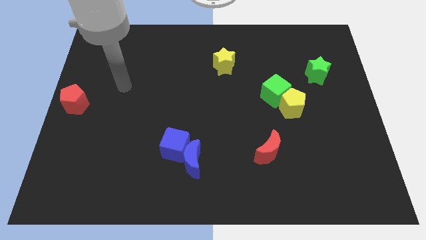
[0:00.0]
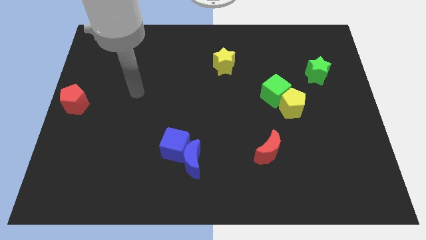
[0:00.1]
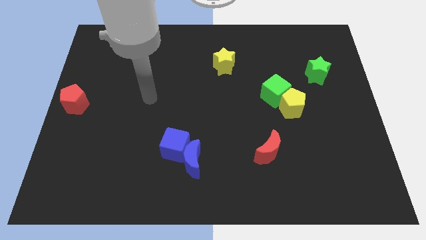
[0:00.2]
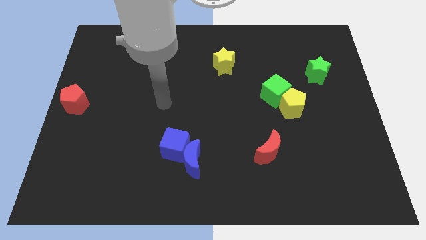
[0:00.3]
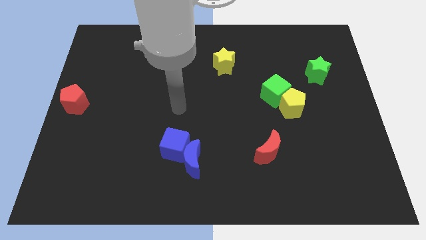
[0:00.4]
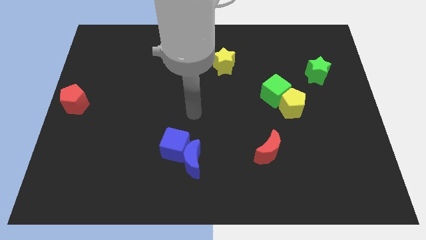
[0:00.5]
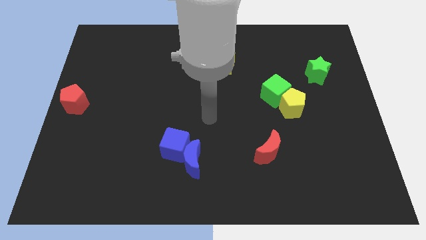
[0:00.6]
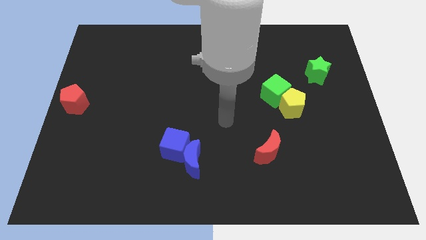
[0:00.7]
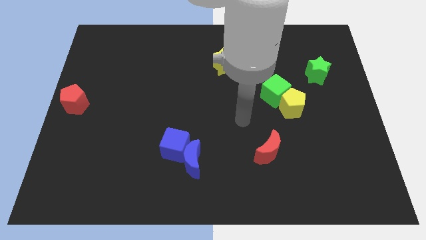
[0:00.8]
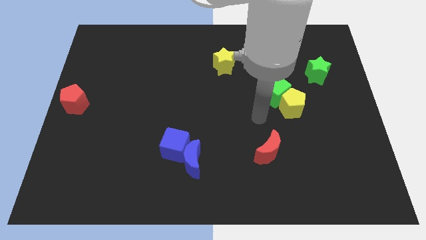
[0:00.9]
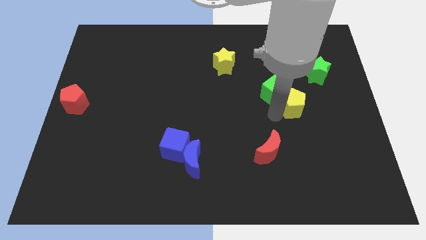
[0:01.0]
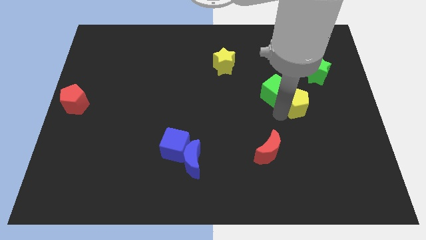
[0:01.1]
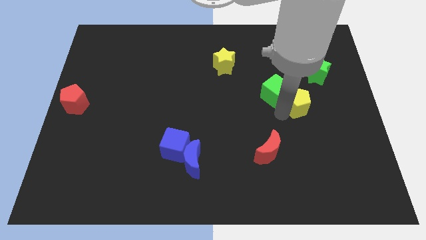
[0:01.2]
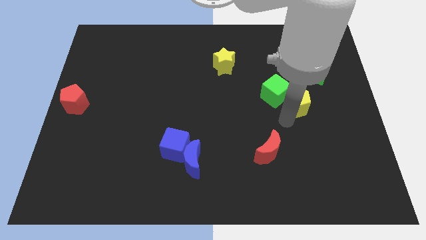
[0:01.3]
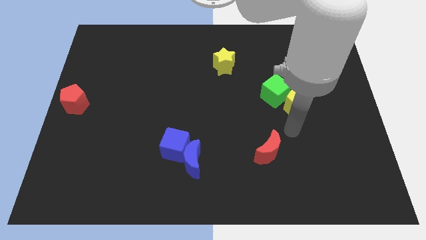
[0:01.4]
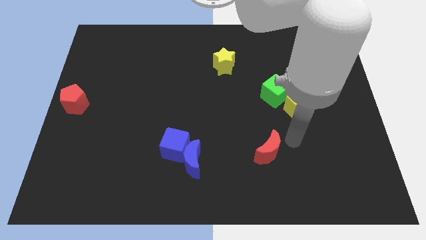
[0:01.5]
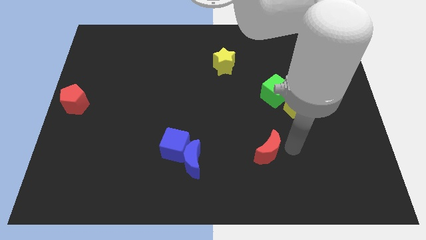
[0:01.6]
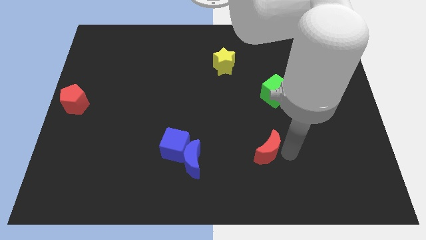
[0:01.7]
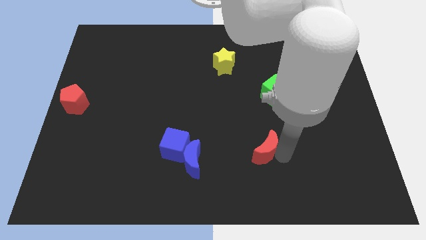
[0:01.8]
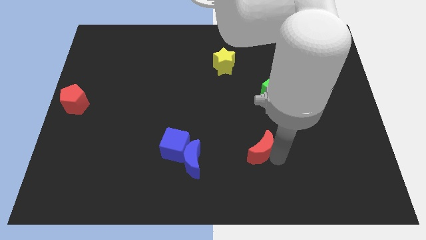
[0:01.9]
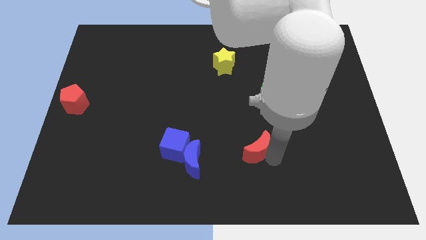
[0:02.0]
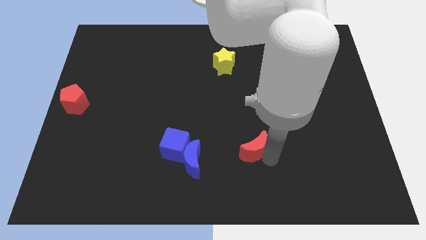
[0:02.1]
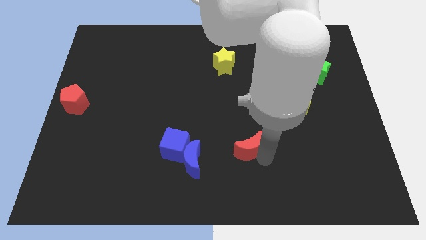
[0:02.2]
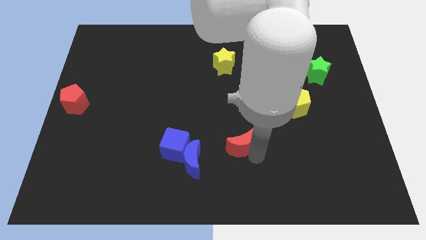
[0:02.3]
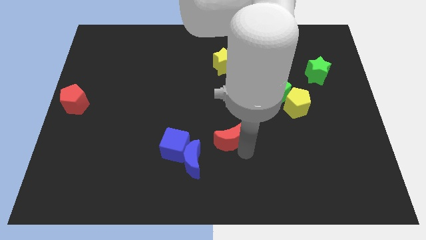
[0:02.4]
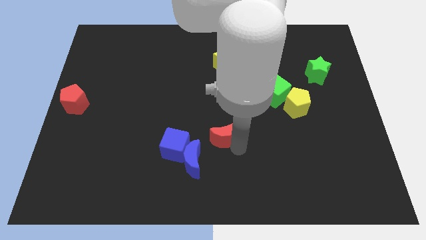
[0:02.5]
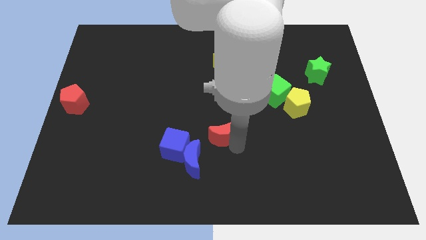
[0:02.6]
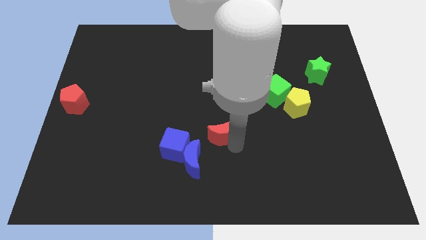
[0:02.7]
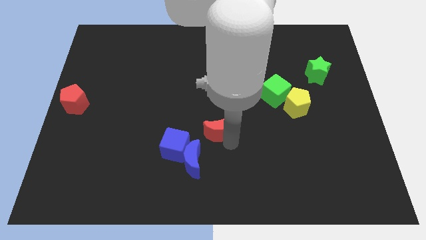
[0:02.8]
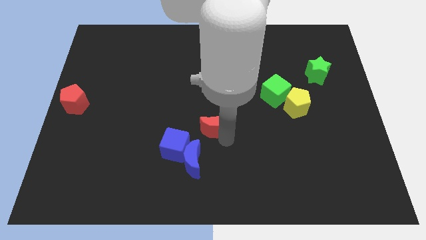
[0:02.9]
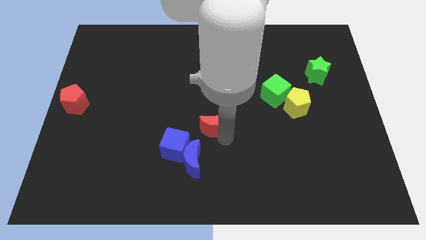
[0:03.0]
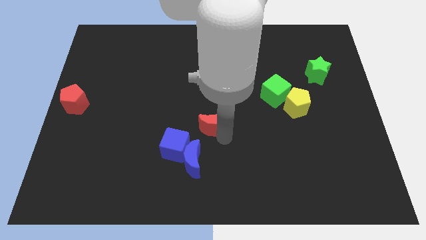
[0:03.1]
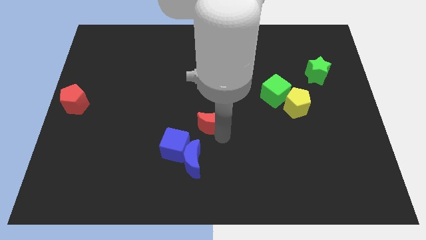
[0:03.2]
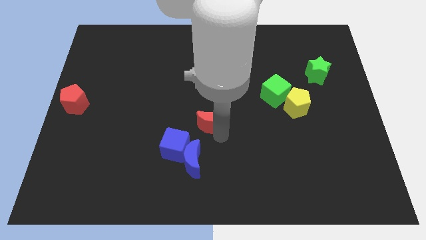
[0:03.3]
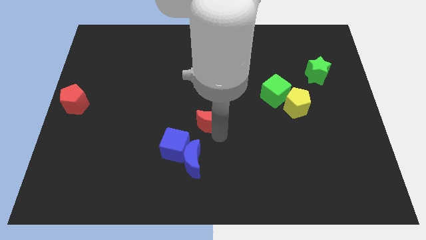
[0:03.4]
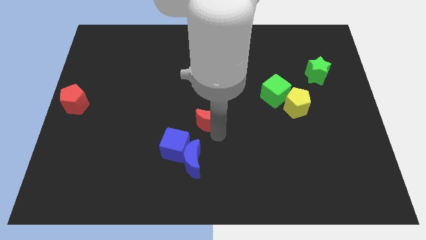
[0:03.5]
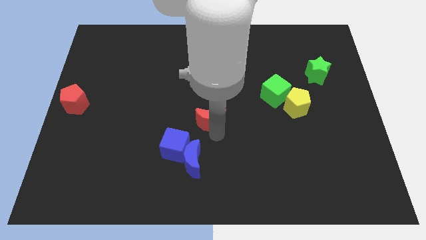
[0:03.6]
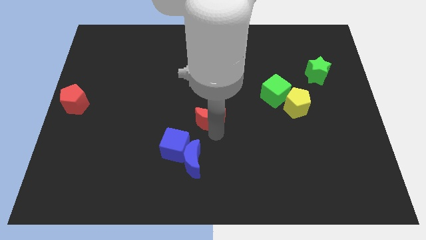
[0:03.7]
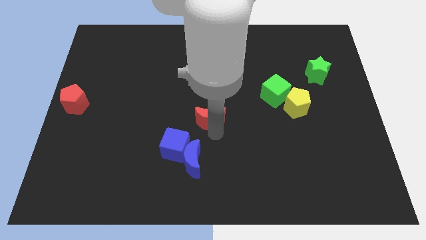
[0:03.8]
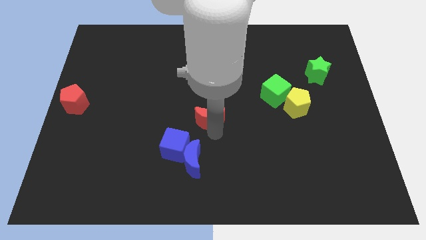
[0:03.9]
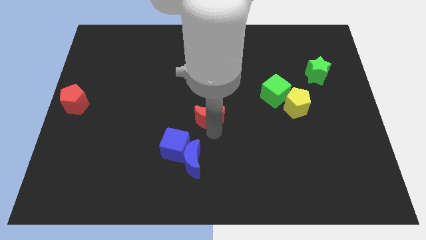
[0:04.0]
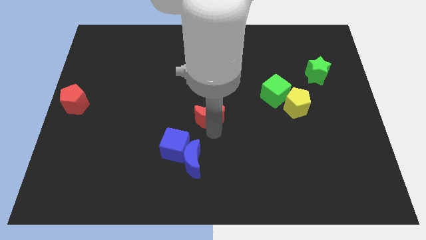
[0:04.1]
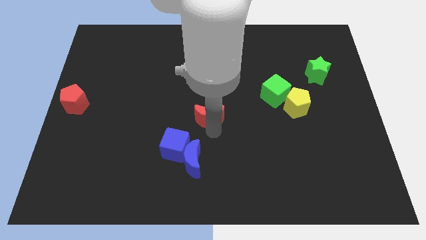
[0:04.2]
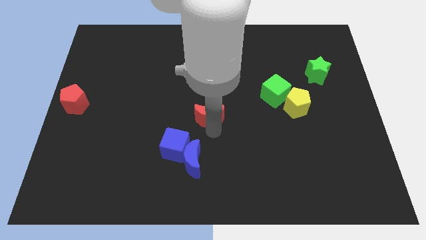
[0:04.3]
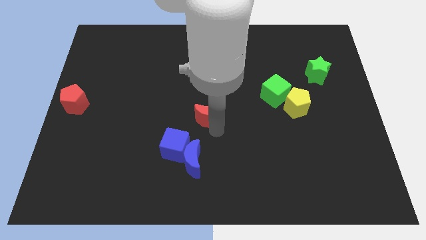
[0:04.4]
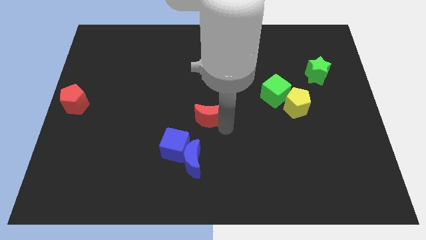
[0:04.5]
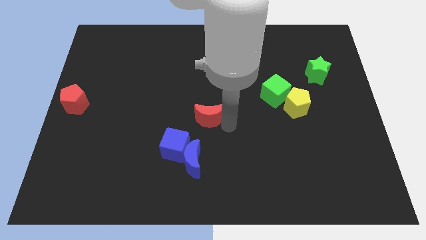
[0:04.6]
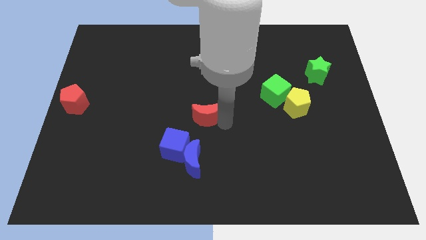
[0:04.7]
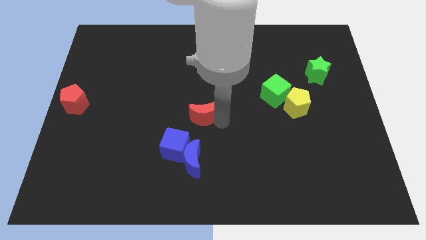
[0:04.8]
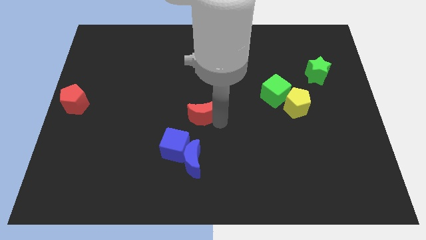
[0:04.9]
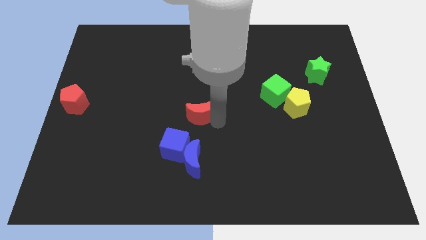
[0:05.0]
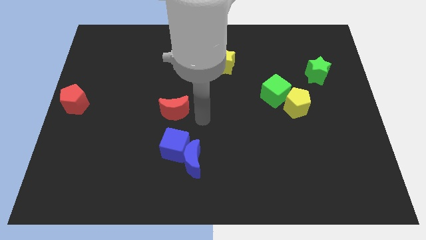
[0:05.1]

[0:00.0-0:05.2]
place the red moon above the blue cube

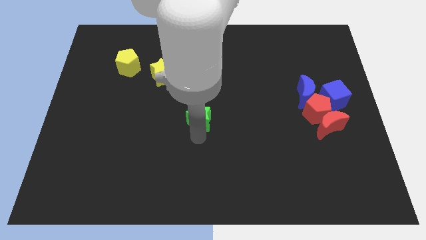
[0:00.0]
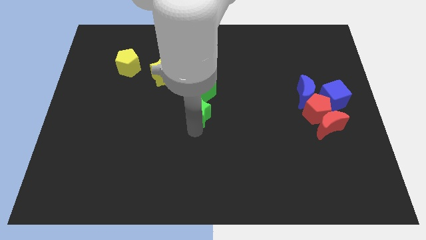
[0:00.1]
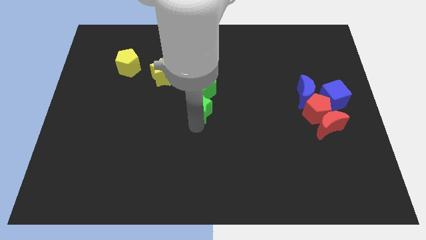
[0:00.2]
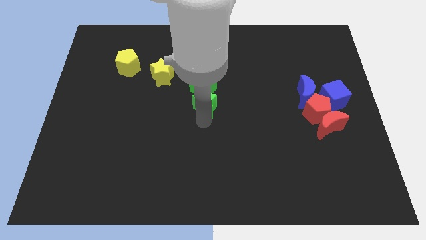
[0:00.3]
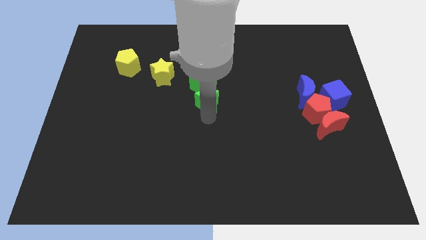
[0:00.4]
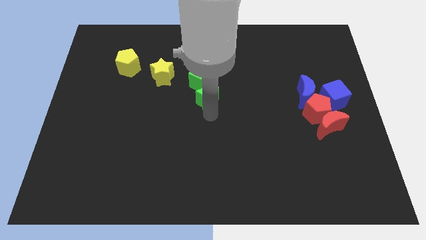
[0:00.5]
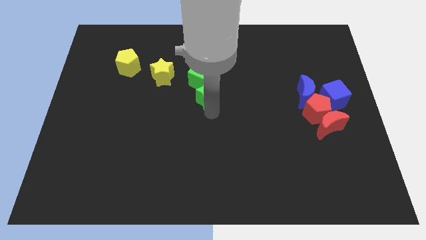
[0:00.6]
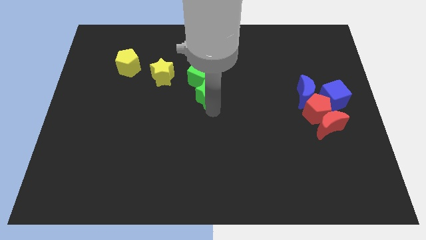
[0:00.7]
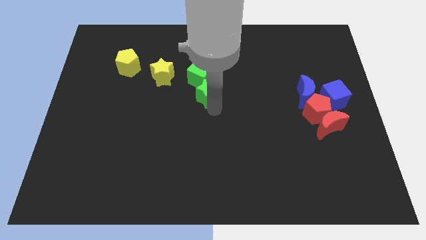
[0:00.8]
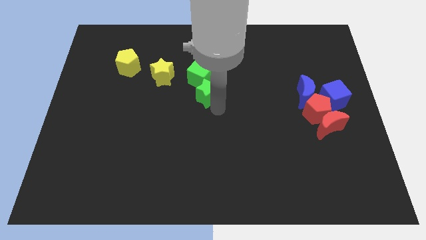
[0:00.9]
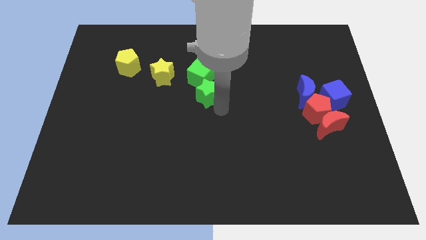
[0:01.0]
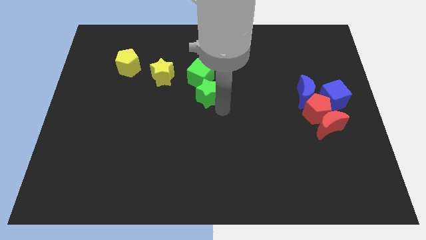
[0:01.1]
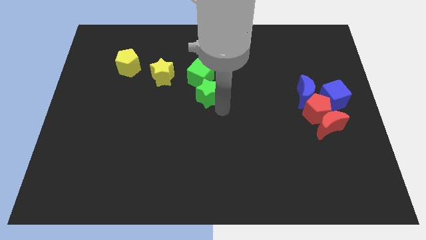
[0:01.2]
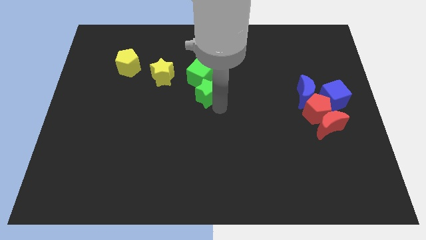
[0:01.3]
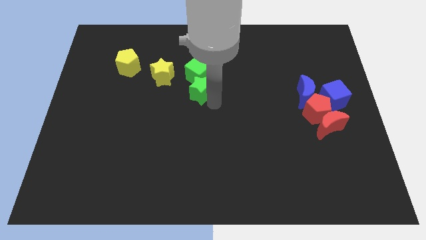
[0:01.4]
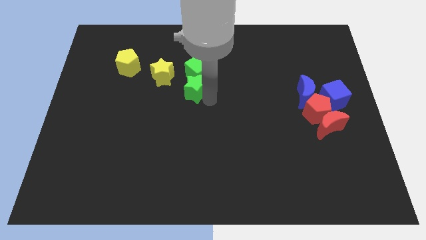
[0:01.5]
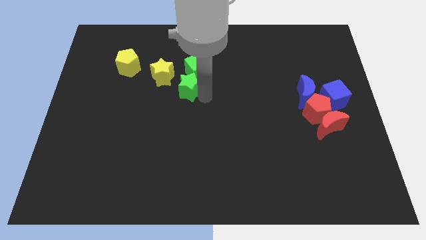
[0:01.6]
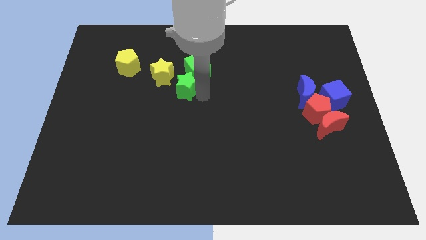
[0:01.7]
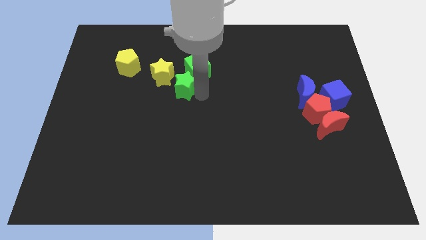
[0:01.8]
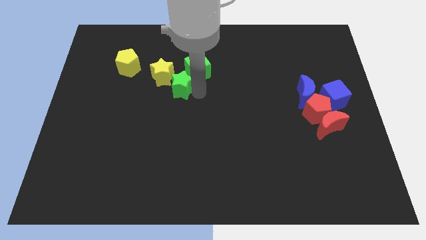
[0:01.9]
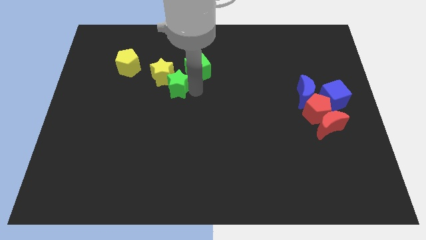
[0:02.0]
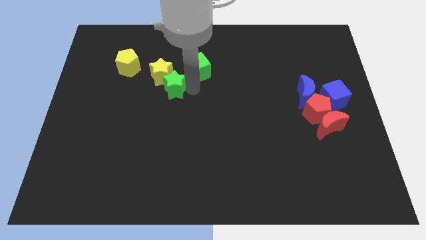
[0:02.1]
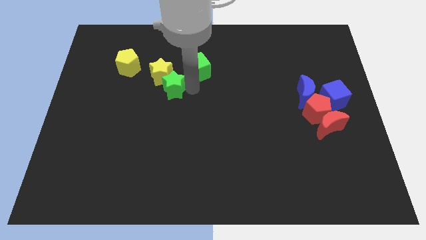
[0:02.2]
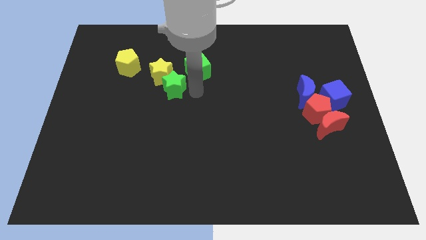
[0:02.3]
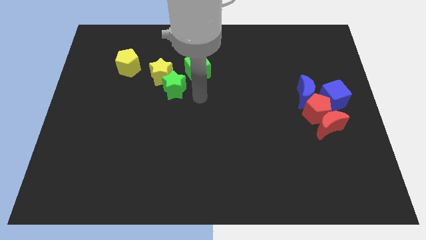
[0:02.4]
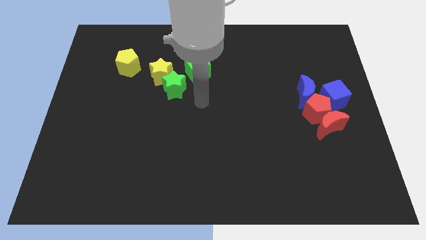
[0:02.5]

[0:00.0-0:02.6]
push the green star into the yellow star

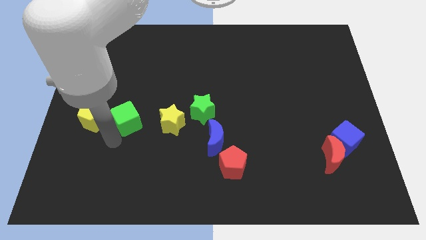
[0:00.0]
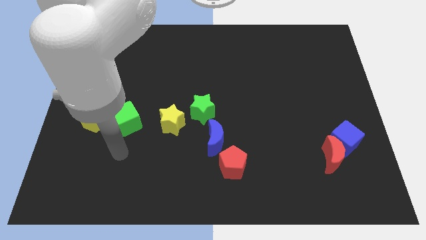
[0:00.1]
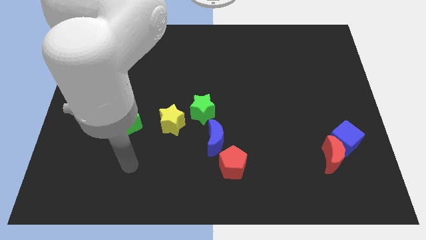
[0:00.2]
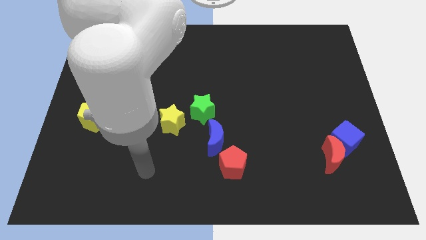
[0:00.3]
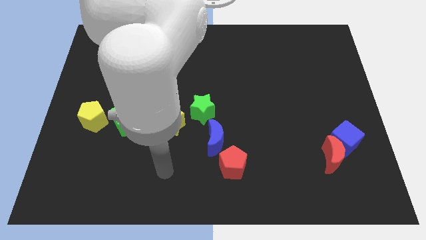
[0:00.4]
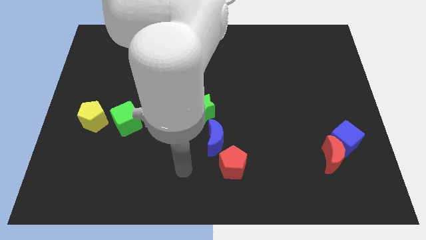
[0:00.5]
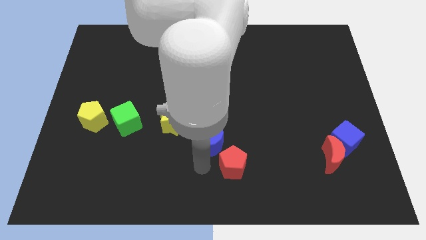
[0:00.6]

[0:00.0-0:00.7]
move arm left beside the red pentagon

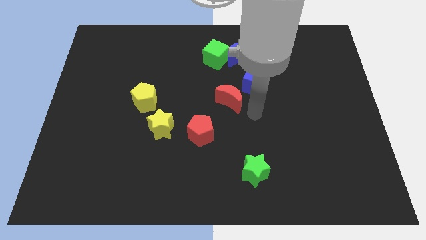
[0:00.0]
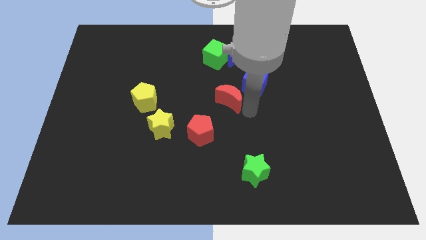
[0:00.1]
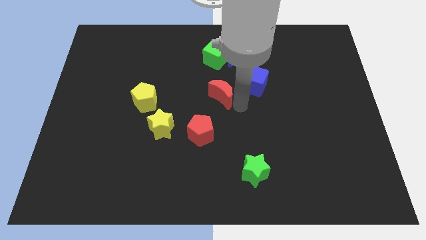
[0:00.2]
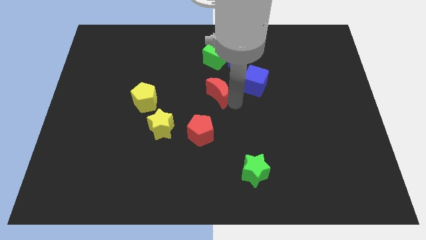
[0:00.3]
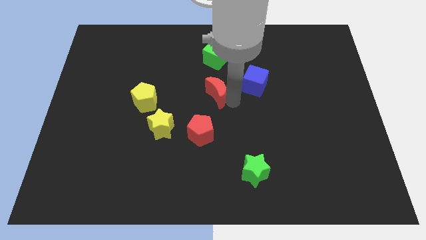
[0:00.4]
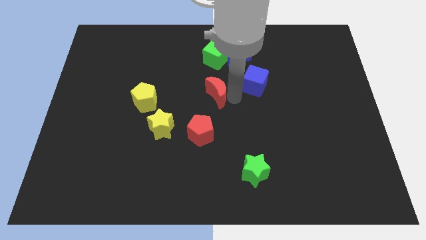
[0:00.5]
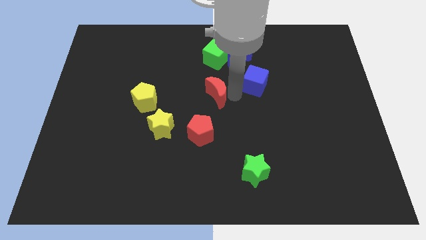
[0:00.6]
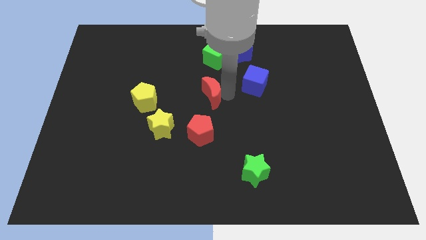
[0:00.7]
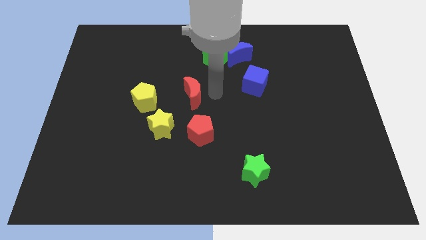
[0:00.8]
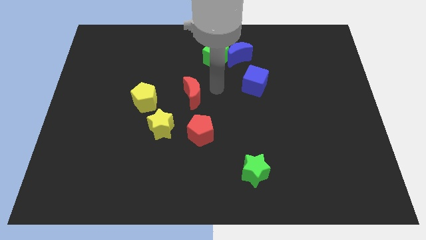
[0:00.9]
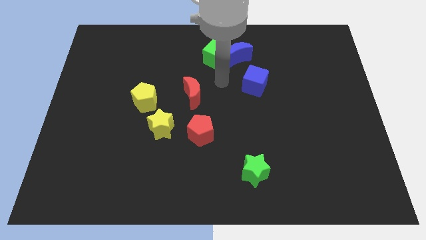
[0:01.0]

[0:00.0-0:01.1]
move the red moon in between the yellow pentagon and blue cube
